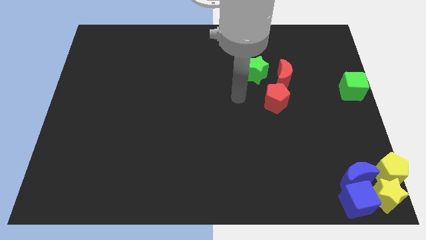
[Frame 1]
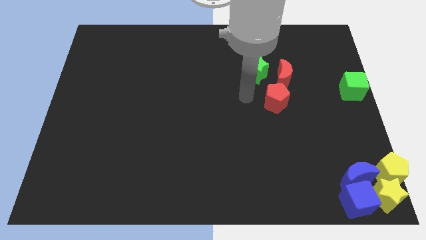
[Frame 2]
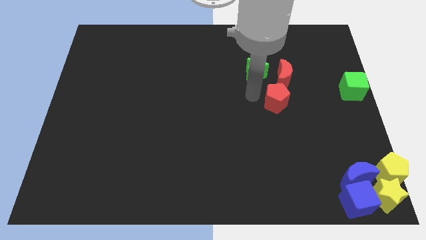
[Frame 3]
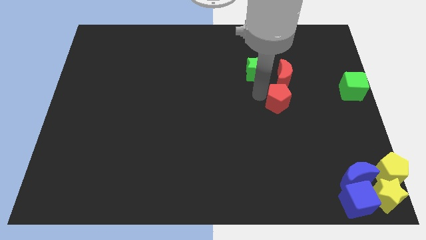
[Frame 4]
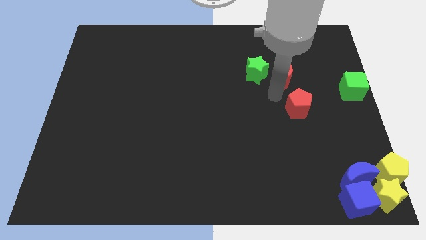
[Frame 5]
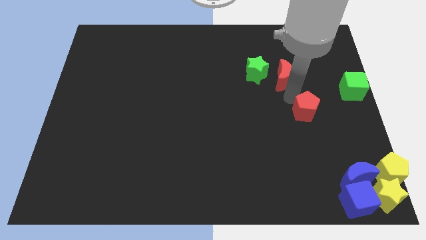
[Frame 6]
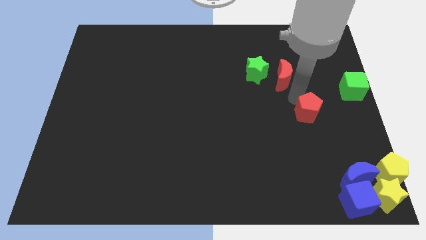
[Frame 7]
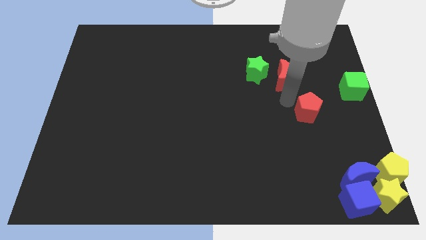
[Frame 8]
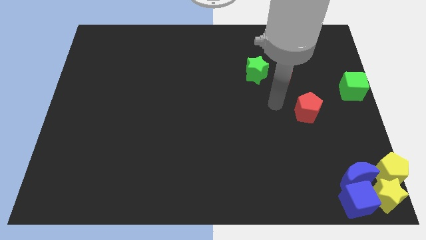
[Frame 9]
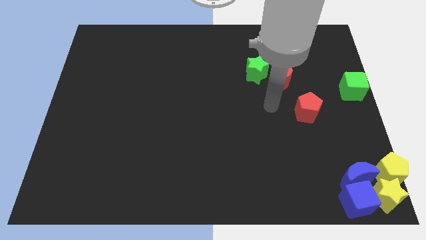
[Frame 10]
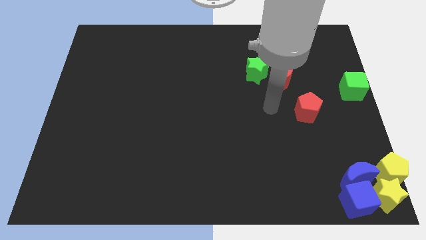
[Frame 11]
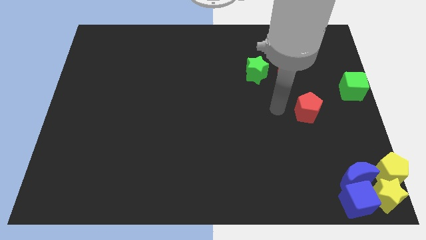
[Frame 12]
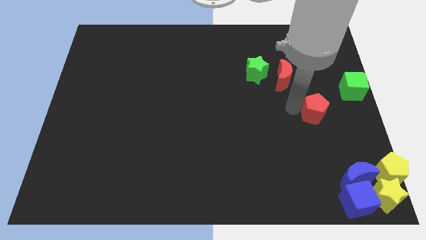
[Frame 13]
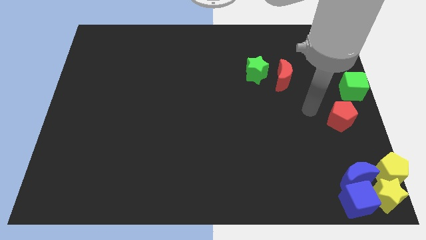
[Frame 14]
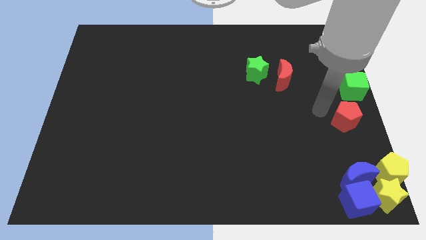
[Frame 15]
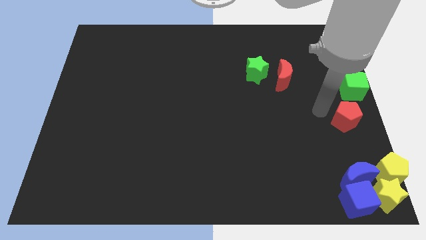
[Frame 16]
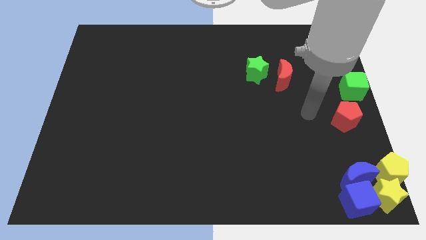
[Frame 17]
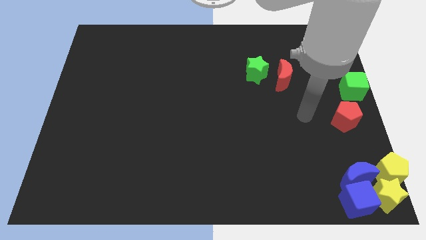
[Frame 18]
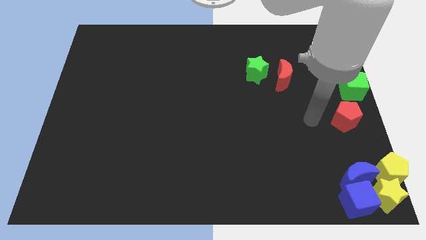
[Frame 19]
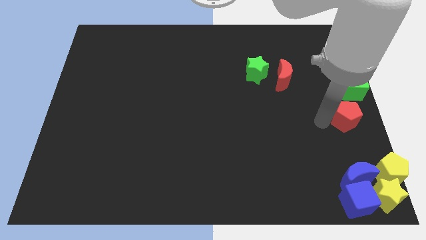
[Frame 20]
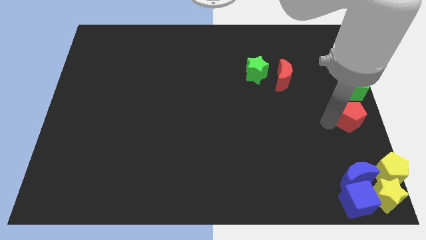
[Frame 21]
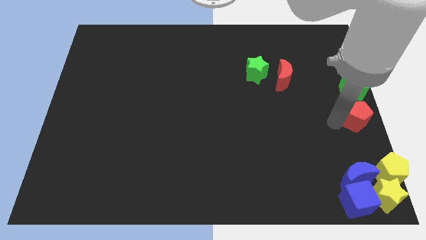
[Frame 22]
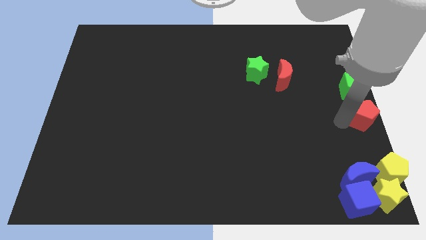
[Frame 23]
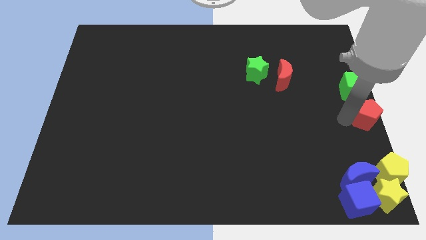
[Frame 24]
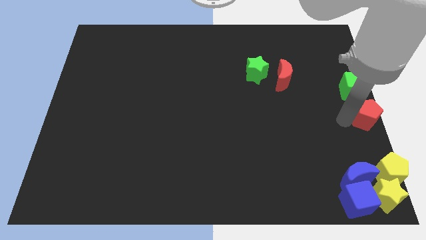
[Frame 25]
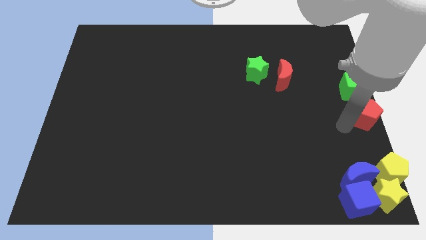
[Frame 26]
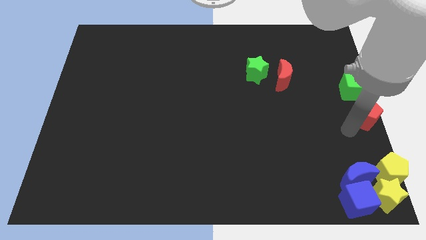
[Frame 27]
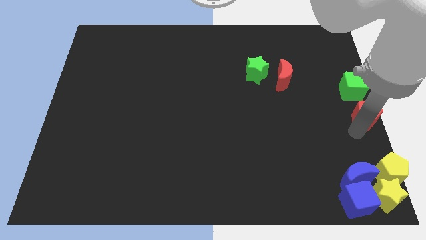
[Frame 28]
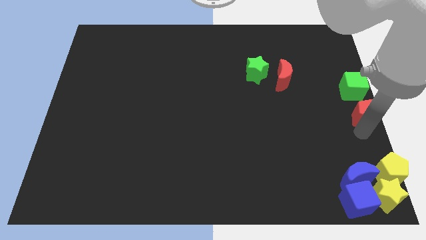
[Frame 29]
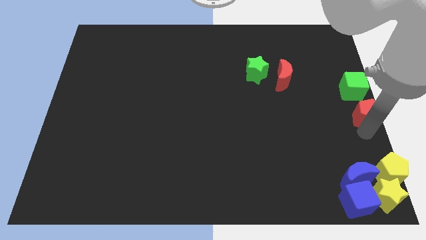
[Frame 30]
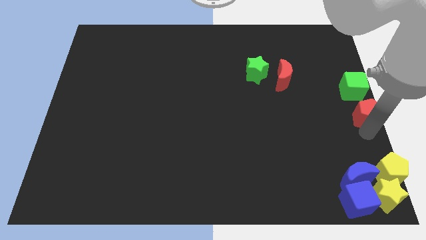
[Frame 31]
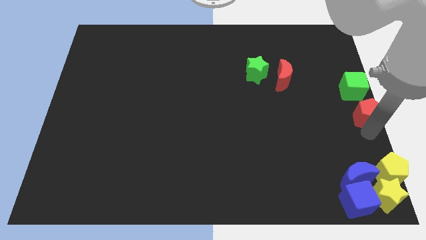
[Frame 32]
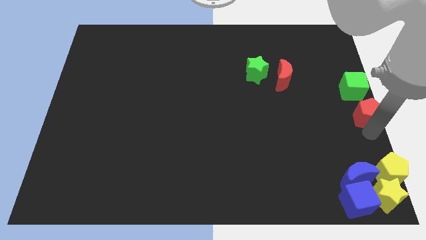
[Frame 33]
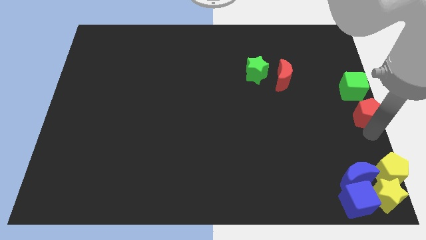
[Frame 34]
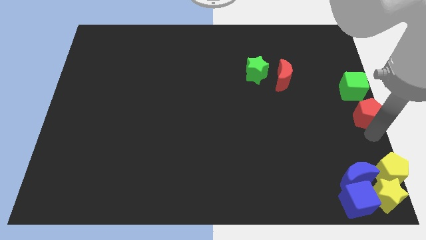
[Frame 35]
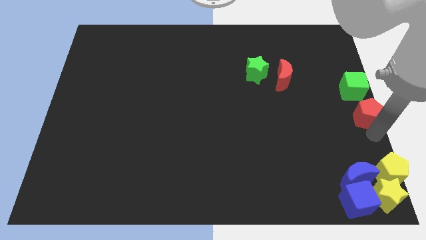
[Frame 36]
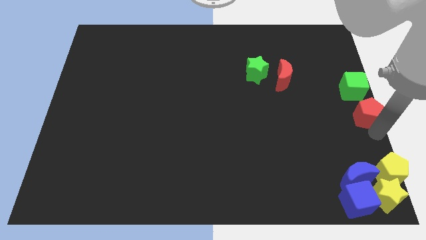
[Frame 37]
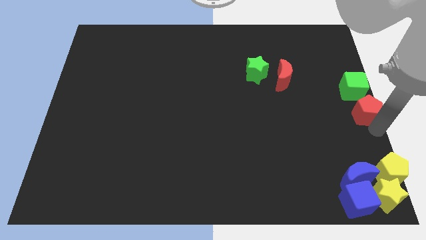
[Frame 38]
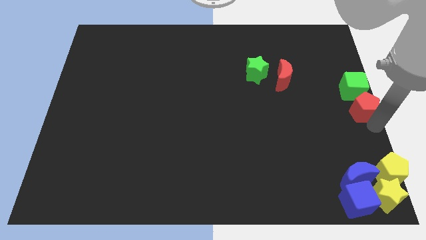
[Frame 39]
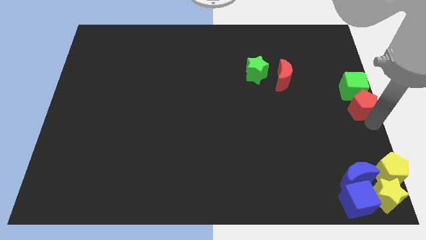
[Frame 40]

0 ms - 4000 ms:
move the red pentagon below the green cube

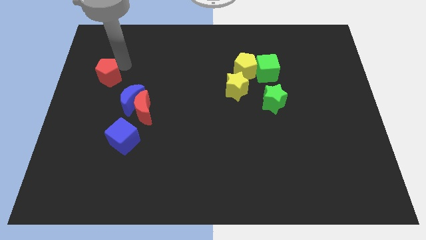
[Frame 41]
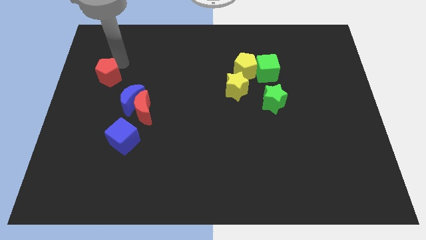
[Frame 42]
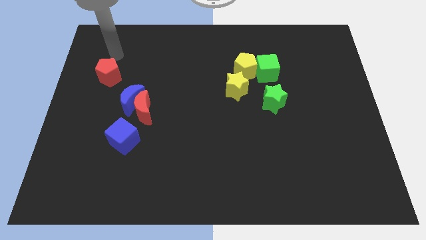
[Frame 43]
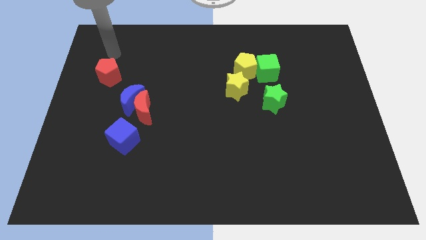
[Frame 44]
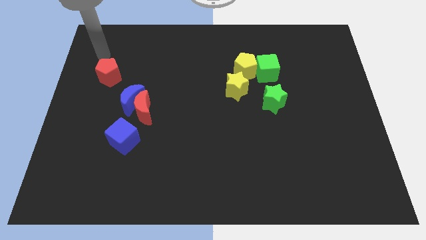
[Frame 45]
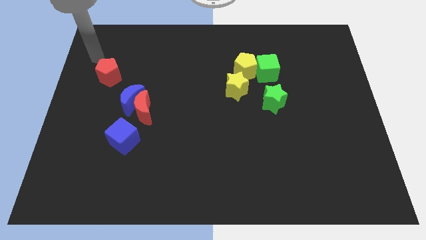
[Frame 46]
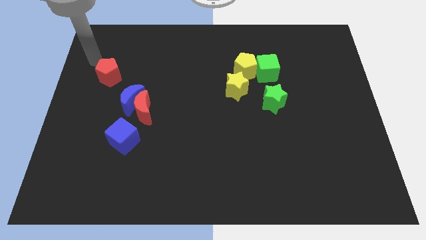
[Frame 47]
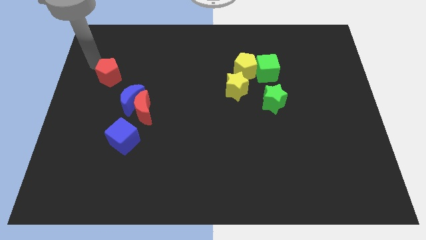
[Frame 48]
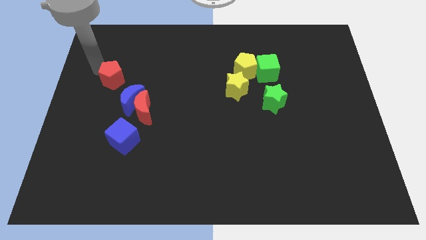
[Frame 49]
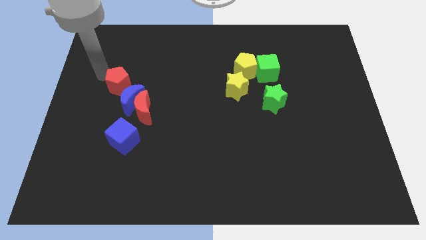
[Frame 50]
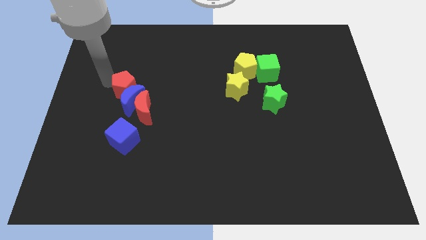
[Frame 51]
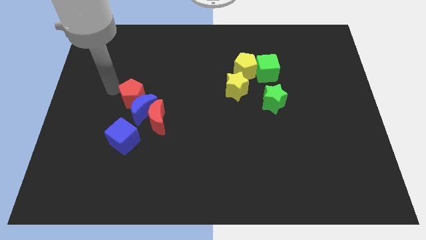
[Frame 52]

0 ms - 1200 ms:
place red pentagon on the top of blue moon

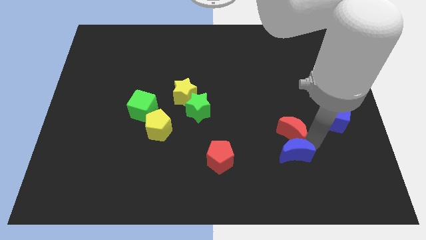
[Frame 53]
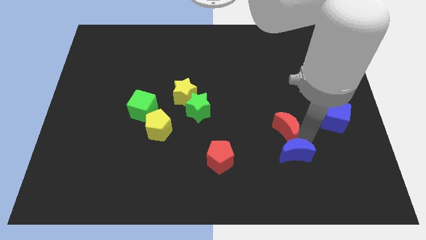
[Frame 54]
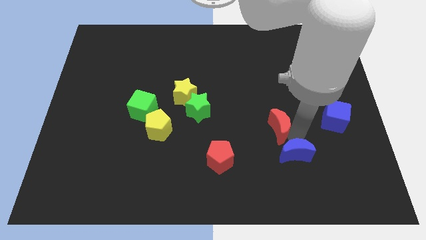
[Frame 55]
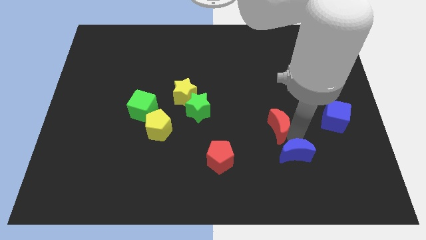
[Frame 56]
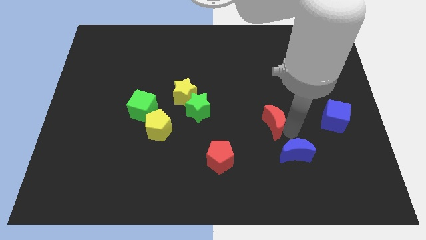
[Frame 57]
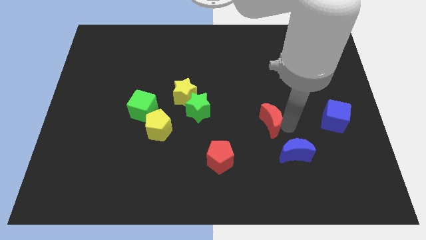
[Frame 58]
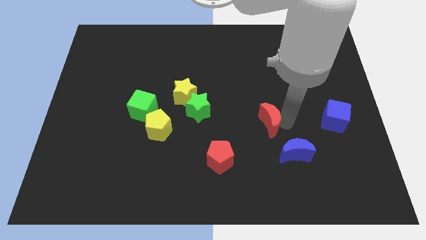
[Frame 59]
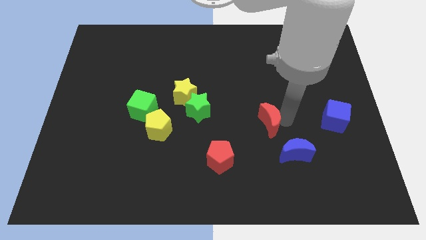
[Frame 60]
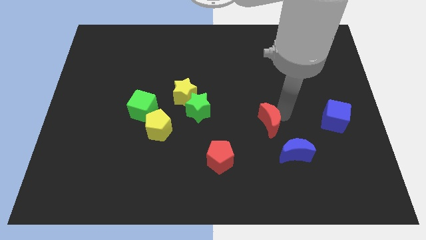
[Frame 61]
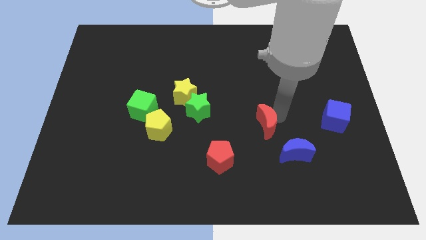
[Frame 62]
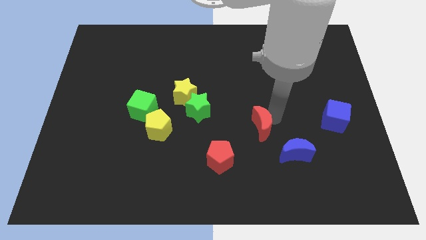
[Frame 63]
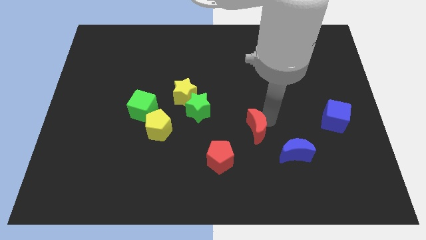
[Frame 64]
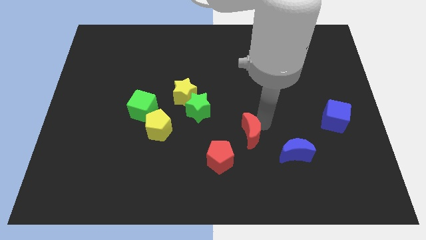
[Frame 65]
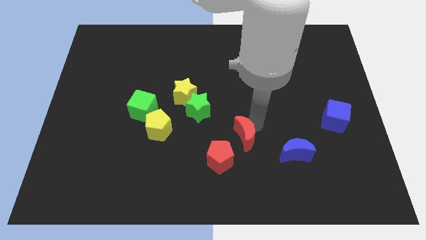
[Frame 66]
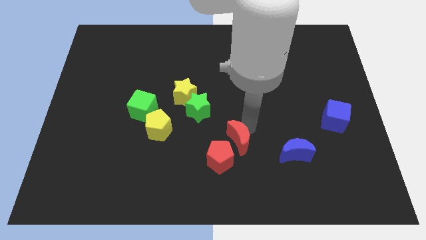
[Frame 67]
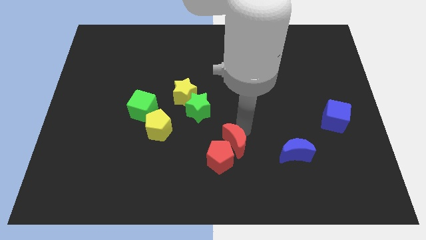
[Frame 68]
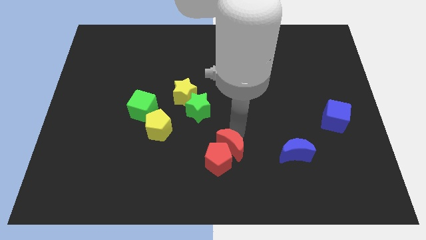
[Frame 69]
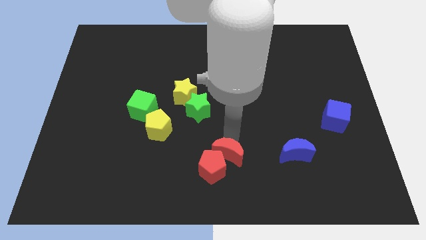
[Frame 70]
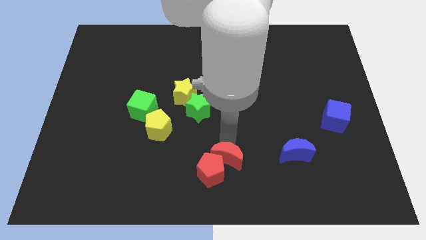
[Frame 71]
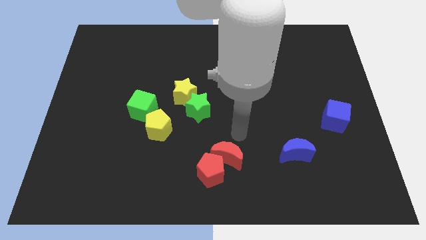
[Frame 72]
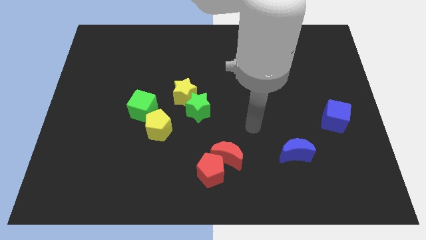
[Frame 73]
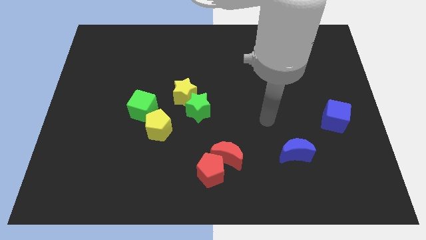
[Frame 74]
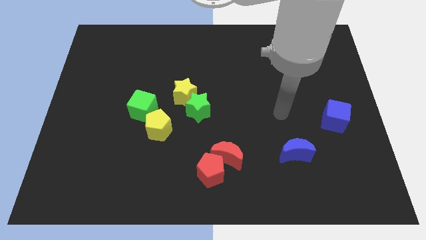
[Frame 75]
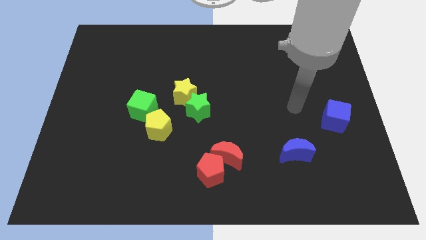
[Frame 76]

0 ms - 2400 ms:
push the red moon into the red pentagon

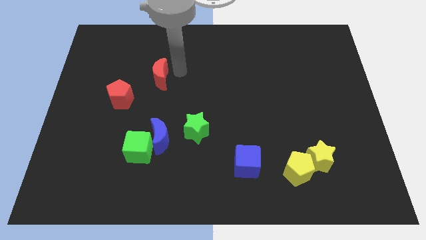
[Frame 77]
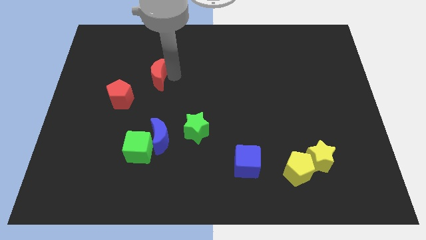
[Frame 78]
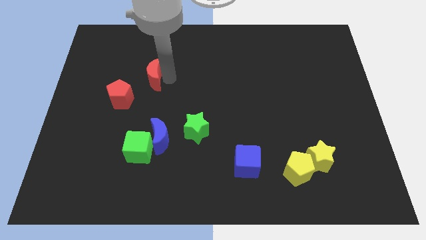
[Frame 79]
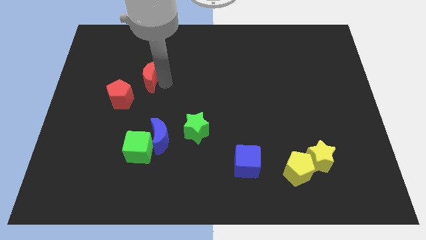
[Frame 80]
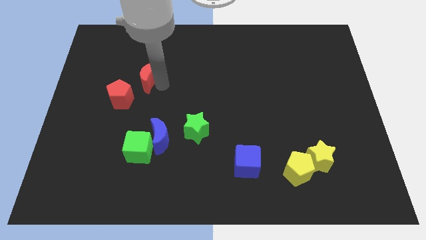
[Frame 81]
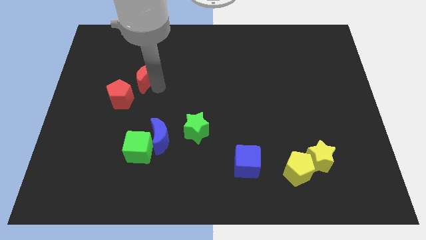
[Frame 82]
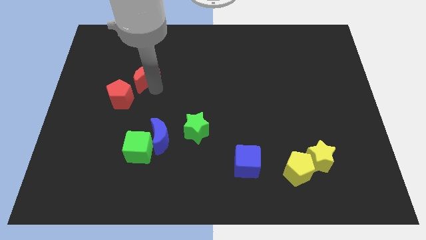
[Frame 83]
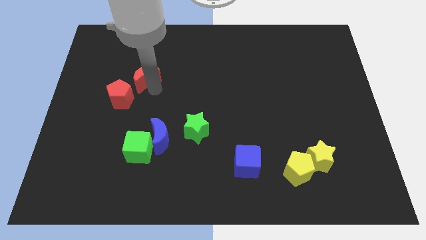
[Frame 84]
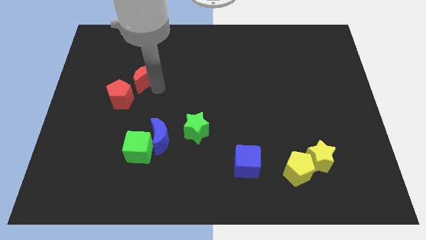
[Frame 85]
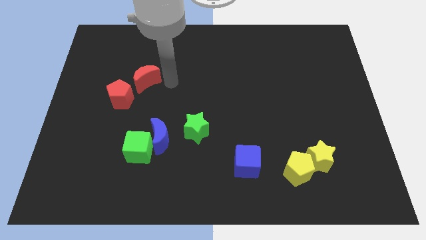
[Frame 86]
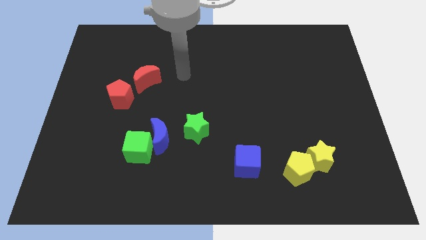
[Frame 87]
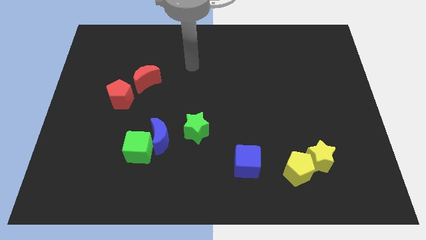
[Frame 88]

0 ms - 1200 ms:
slide the red moon close to the red pentagon

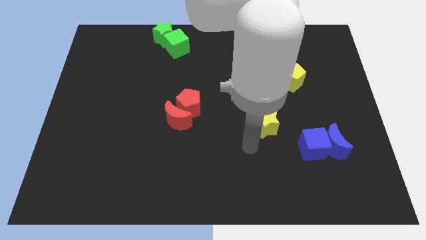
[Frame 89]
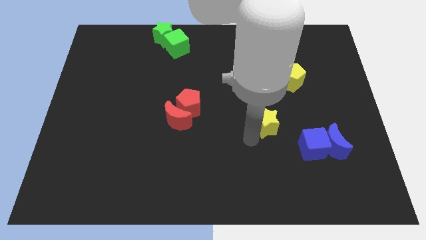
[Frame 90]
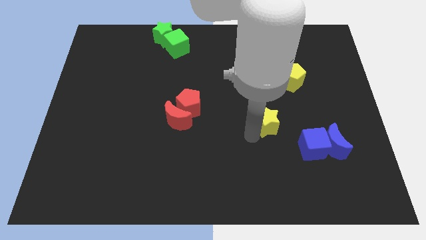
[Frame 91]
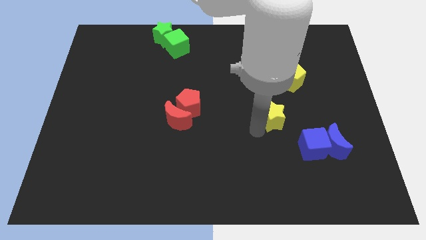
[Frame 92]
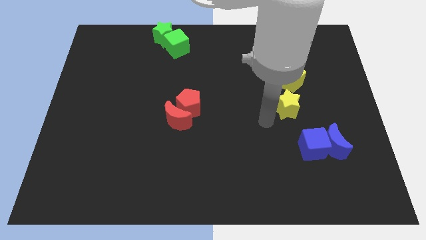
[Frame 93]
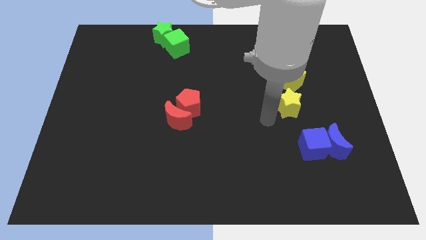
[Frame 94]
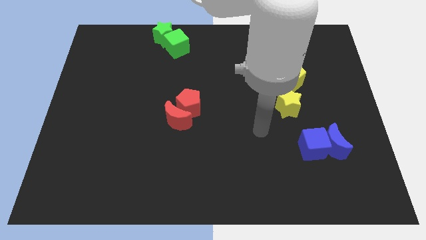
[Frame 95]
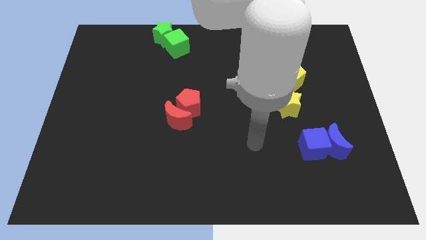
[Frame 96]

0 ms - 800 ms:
put the yellow star at the bottom of the yellow pentagon
